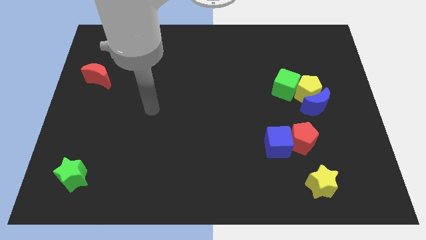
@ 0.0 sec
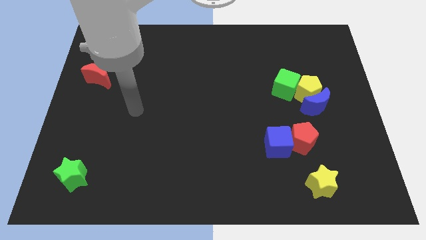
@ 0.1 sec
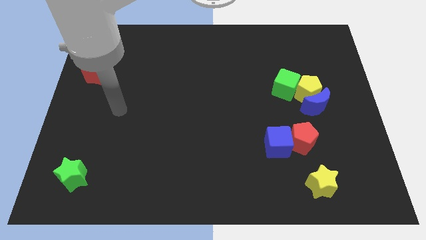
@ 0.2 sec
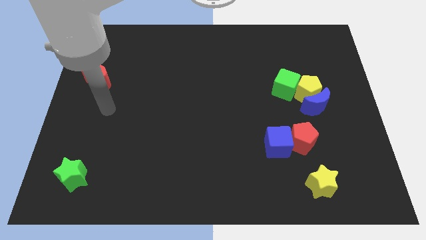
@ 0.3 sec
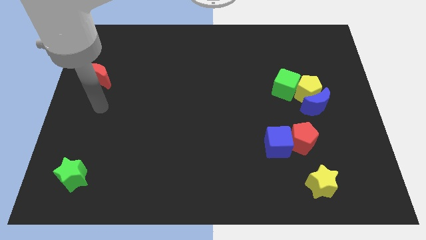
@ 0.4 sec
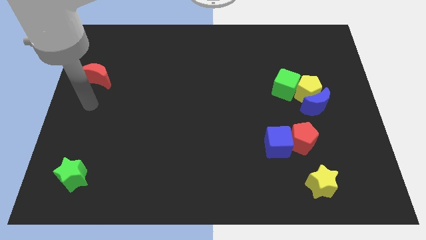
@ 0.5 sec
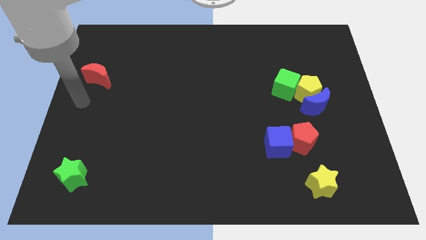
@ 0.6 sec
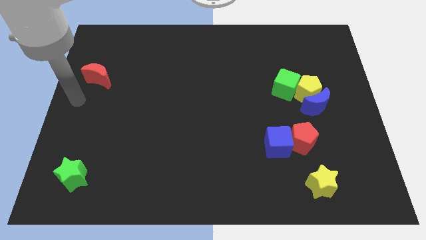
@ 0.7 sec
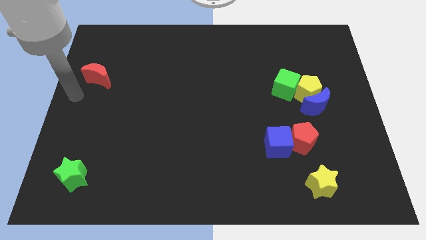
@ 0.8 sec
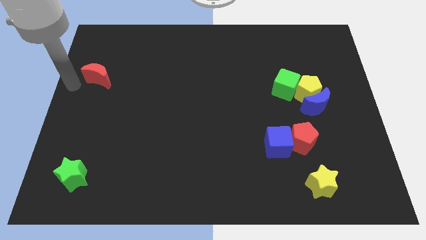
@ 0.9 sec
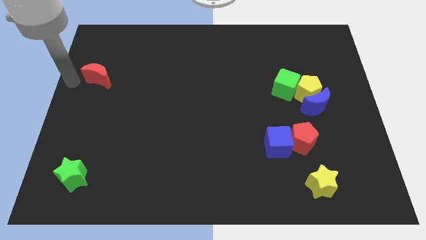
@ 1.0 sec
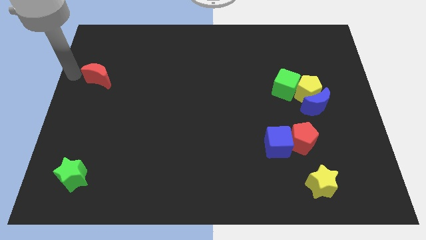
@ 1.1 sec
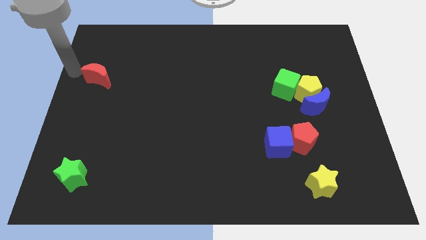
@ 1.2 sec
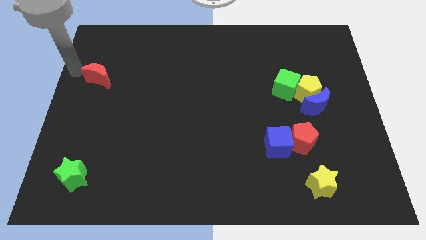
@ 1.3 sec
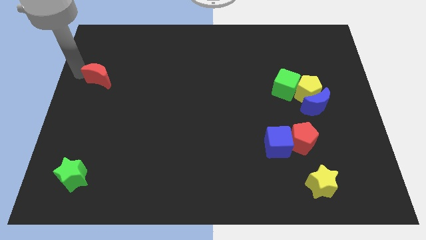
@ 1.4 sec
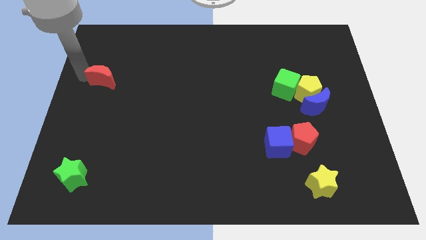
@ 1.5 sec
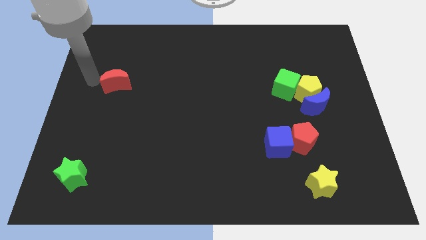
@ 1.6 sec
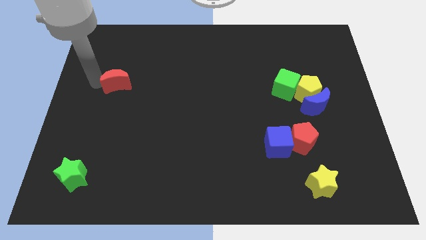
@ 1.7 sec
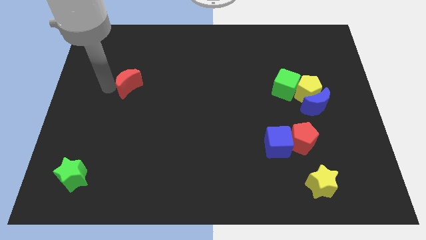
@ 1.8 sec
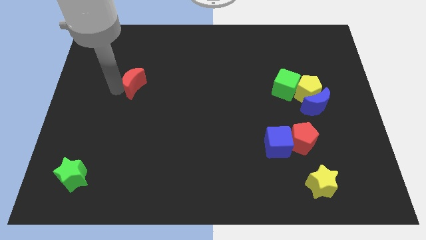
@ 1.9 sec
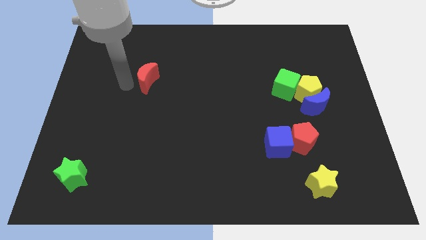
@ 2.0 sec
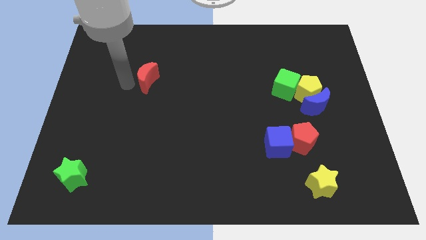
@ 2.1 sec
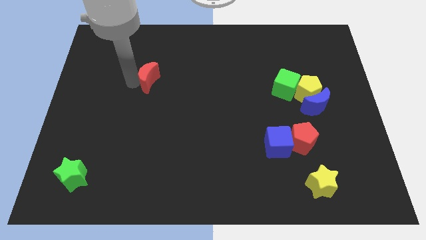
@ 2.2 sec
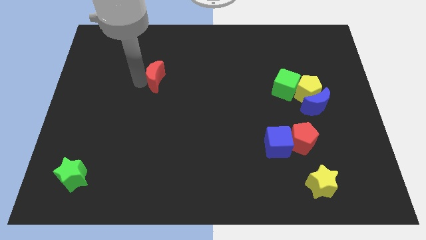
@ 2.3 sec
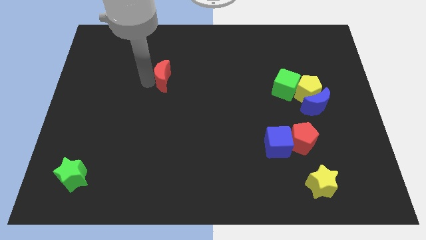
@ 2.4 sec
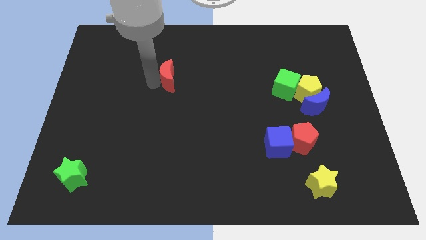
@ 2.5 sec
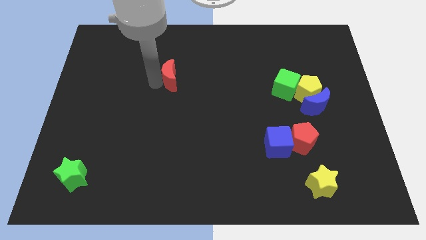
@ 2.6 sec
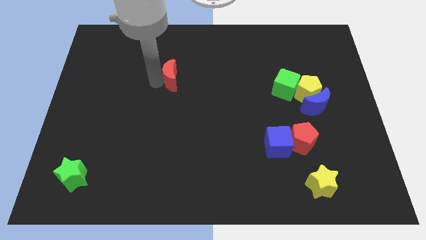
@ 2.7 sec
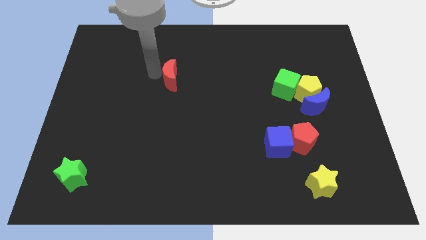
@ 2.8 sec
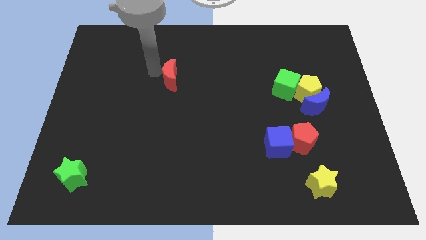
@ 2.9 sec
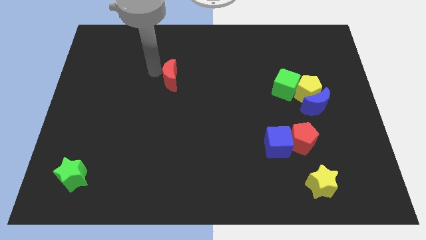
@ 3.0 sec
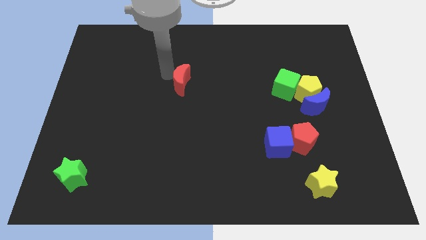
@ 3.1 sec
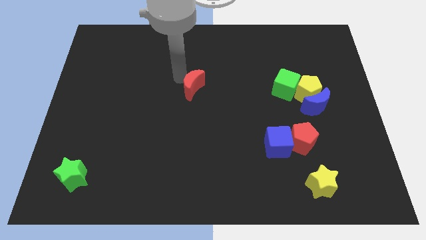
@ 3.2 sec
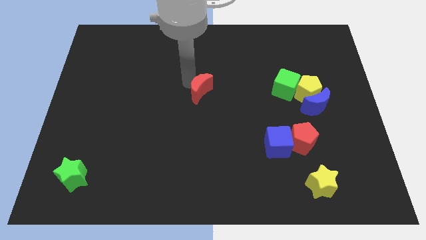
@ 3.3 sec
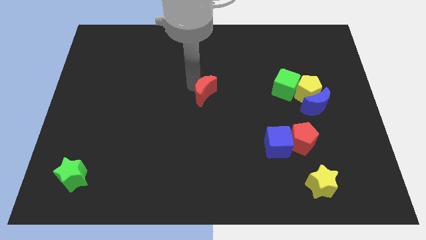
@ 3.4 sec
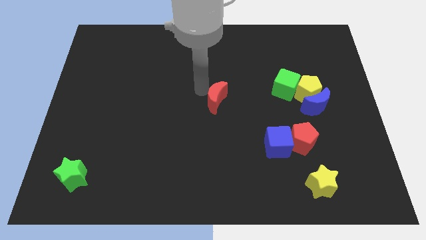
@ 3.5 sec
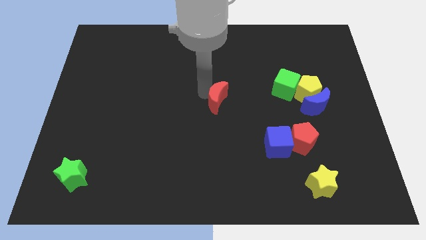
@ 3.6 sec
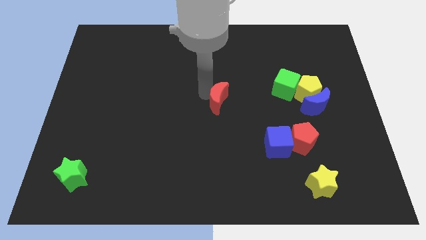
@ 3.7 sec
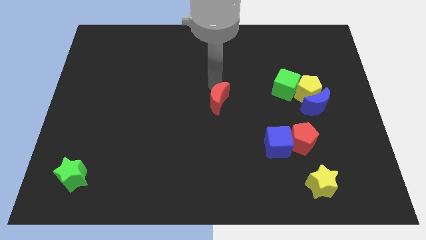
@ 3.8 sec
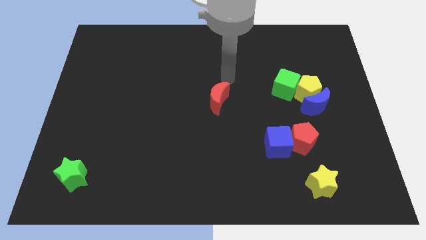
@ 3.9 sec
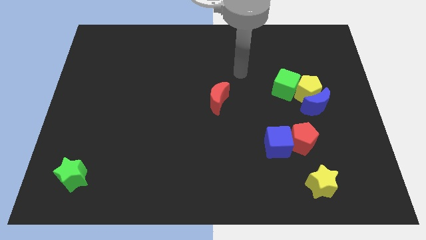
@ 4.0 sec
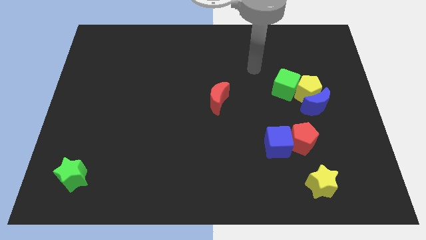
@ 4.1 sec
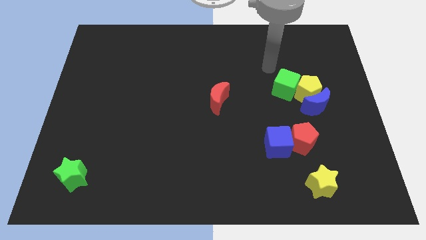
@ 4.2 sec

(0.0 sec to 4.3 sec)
place the red crescent to the center of the board

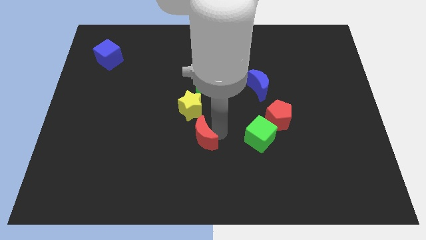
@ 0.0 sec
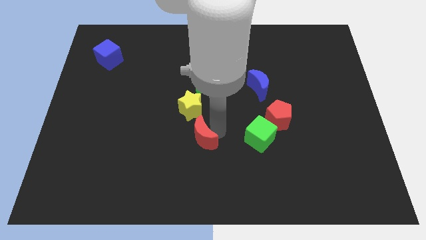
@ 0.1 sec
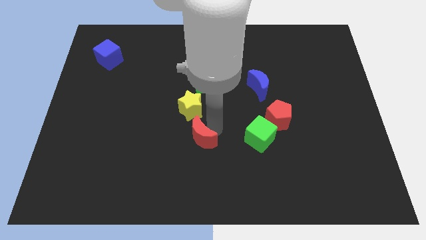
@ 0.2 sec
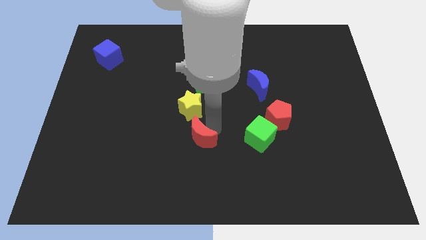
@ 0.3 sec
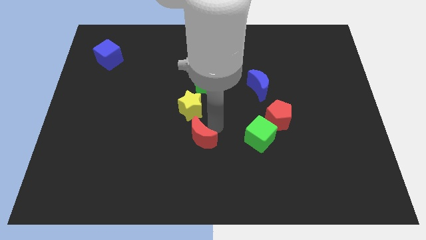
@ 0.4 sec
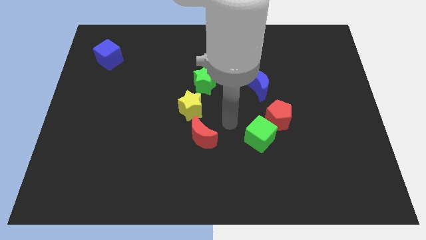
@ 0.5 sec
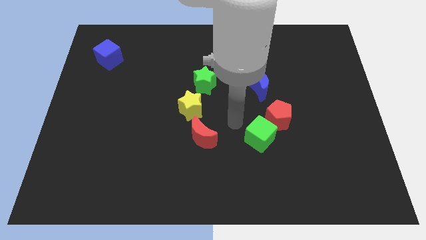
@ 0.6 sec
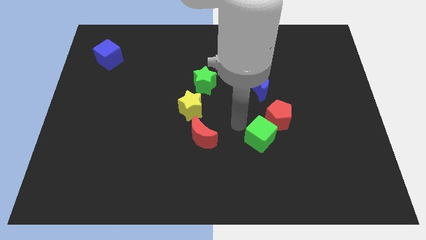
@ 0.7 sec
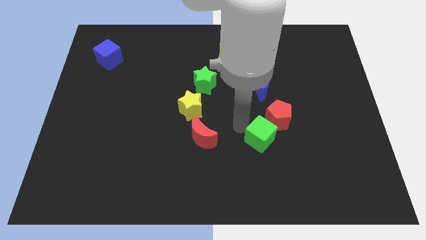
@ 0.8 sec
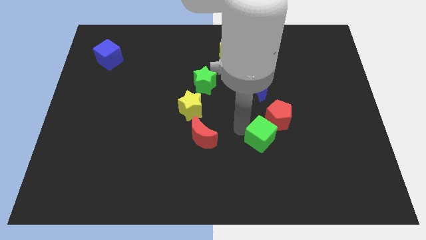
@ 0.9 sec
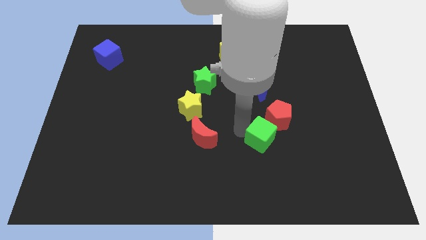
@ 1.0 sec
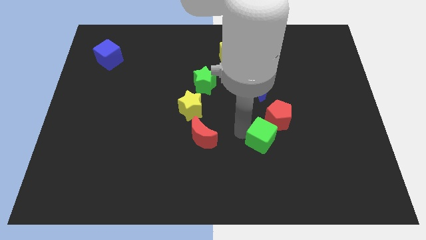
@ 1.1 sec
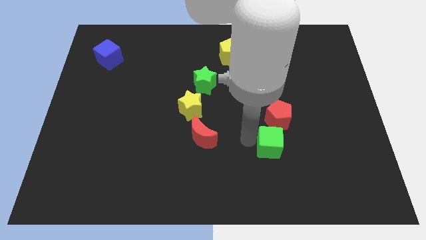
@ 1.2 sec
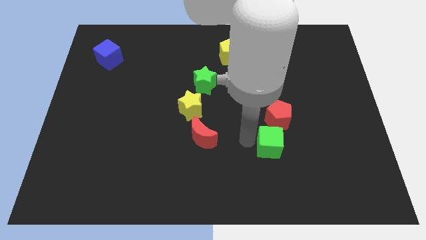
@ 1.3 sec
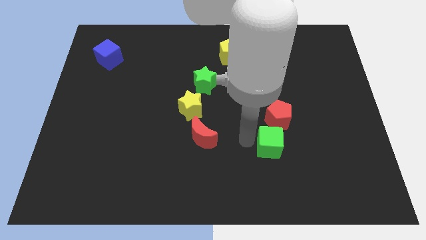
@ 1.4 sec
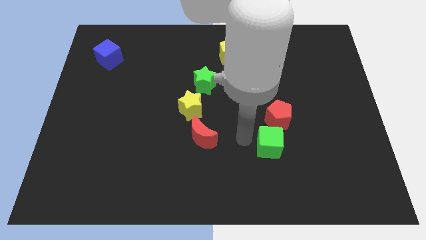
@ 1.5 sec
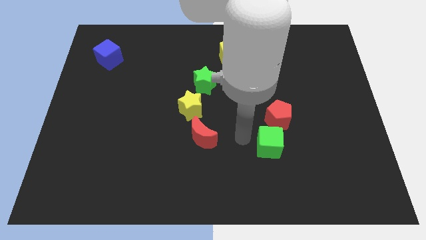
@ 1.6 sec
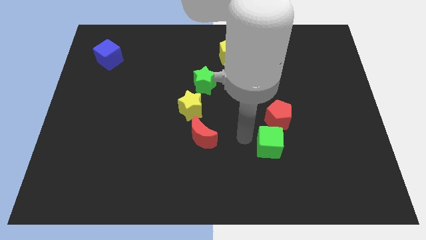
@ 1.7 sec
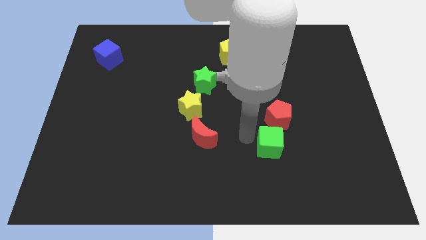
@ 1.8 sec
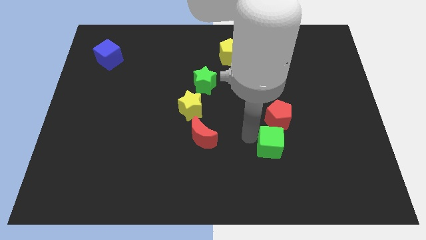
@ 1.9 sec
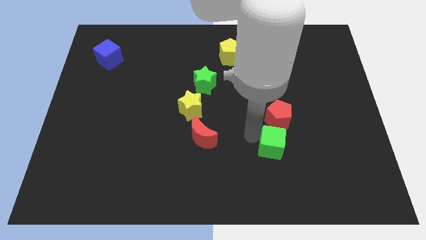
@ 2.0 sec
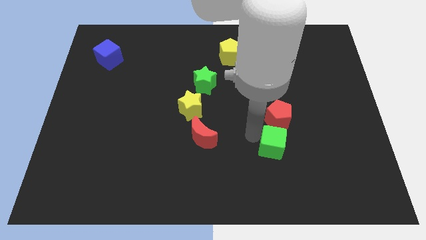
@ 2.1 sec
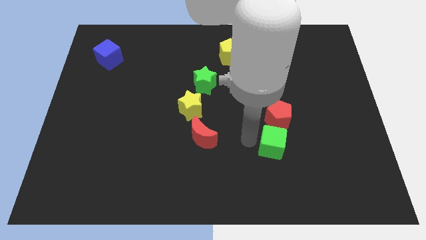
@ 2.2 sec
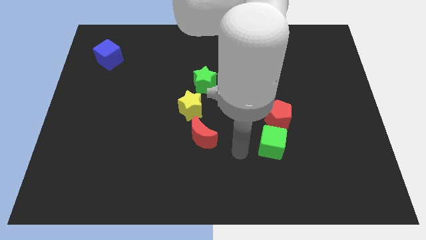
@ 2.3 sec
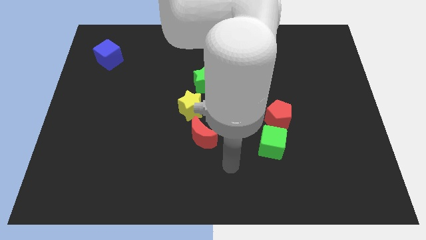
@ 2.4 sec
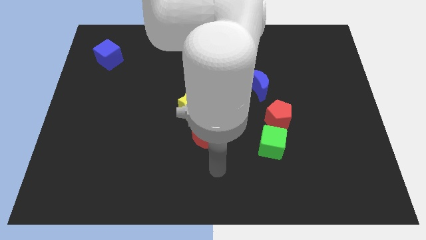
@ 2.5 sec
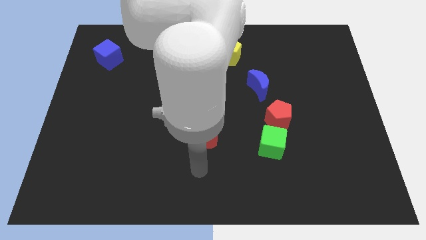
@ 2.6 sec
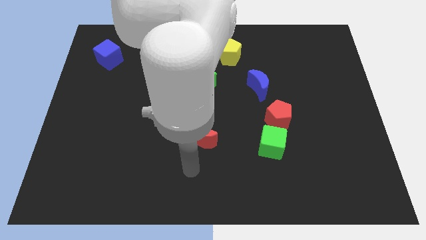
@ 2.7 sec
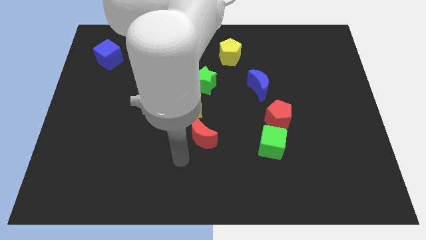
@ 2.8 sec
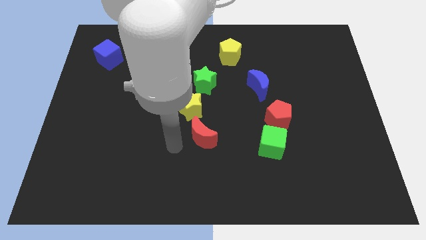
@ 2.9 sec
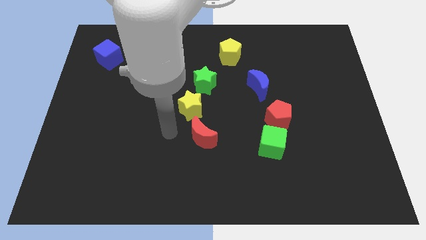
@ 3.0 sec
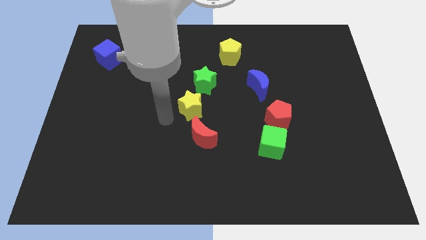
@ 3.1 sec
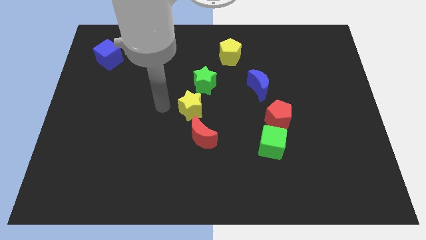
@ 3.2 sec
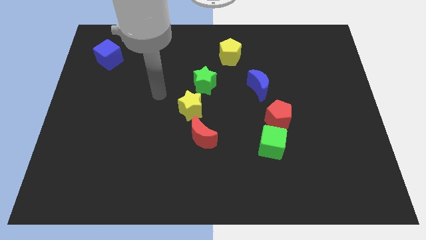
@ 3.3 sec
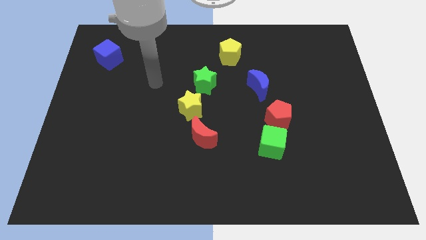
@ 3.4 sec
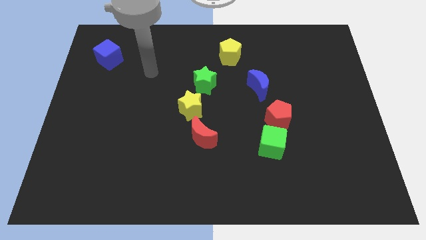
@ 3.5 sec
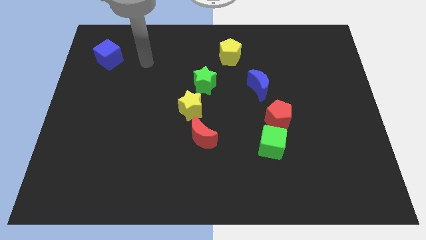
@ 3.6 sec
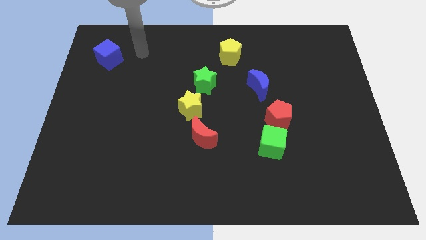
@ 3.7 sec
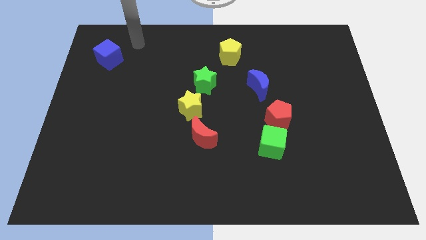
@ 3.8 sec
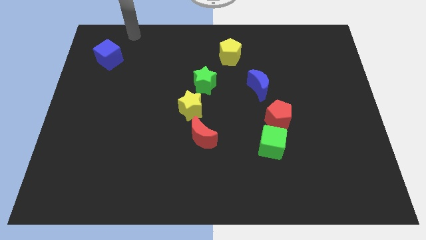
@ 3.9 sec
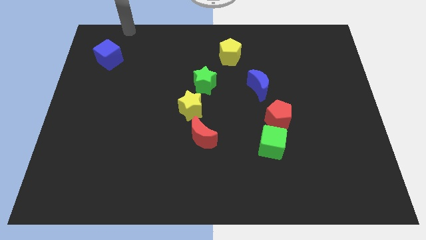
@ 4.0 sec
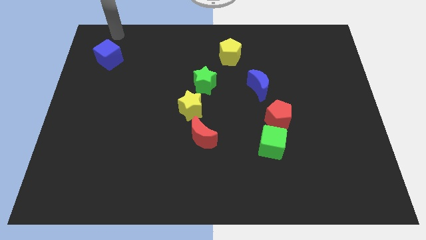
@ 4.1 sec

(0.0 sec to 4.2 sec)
move the arm towards the blue cube

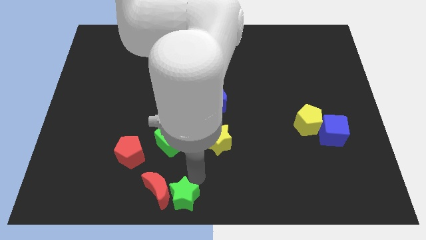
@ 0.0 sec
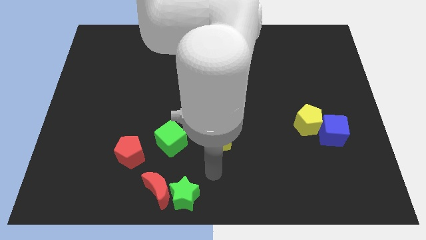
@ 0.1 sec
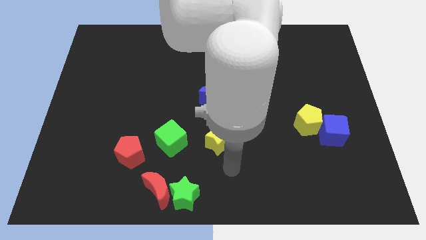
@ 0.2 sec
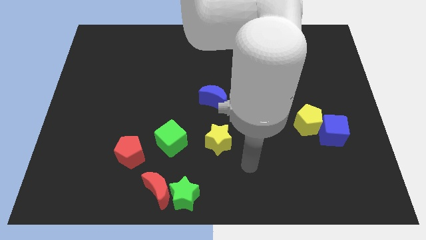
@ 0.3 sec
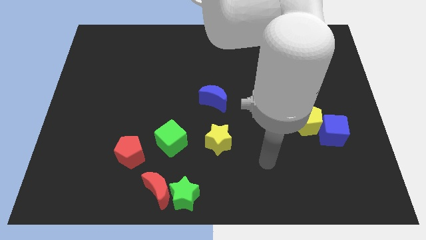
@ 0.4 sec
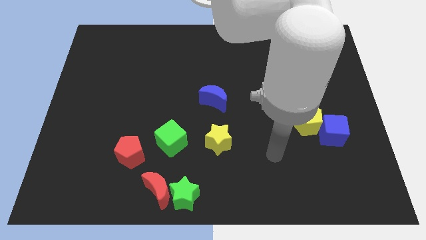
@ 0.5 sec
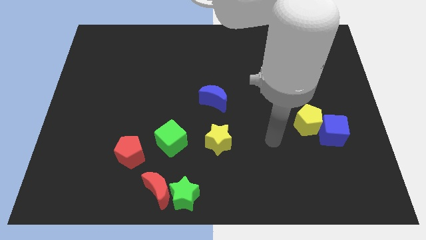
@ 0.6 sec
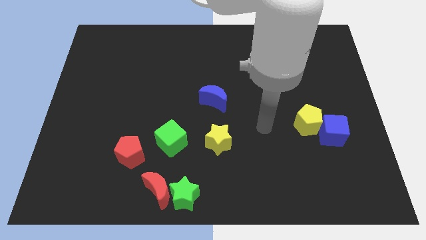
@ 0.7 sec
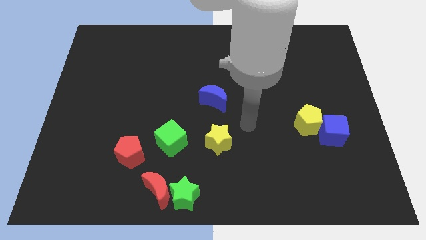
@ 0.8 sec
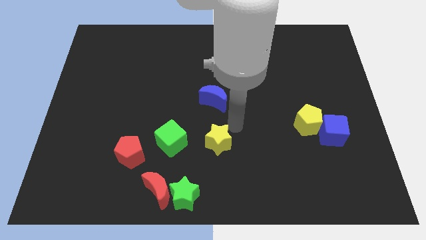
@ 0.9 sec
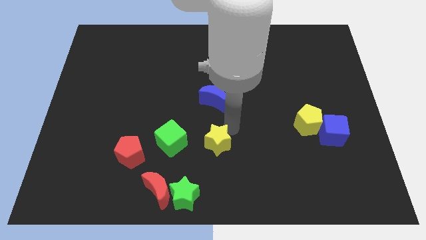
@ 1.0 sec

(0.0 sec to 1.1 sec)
move arm away from the green star
